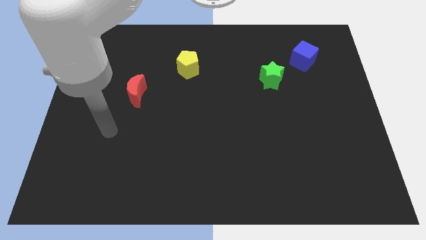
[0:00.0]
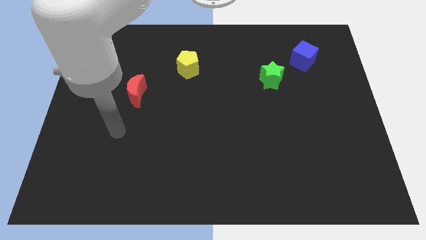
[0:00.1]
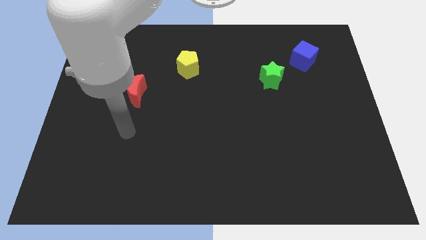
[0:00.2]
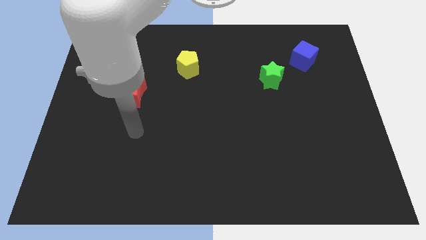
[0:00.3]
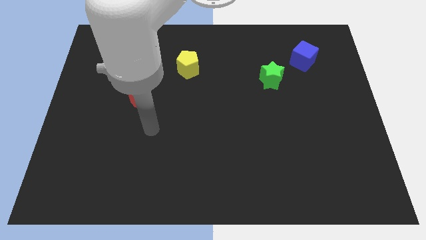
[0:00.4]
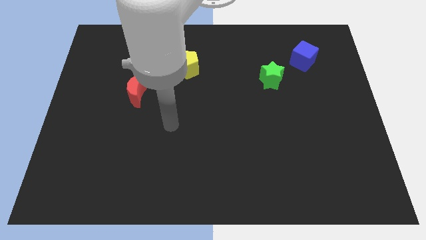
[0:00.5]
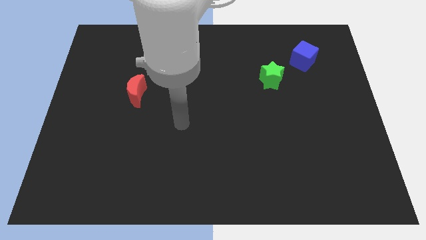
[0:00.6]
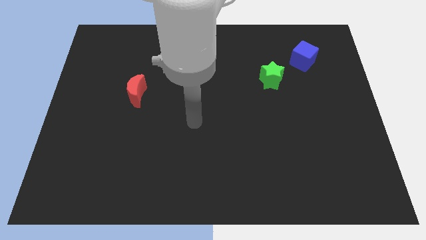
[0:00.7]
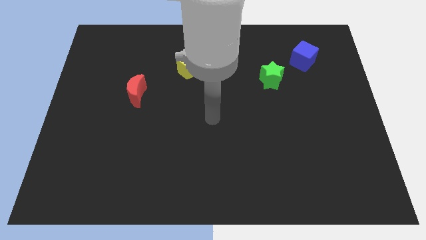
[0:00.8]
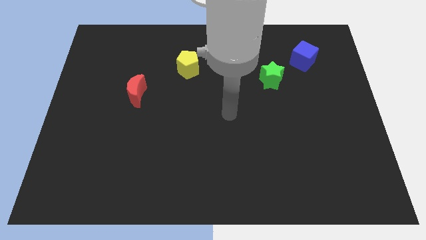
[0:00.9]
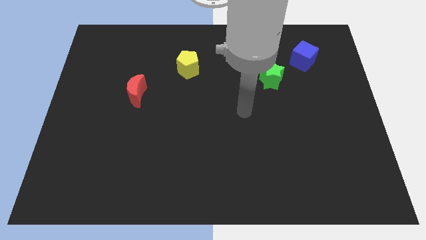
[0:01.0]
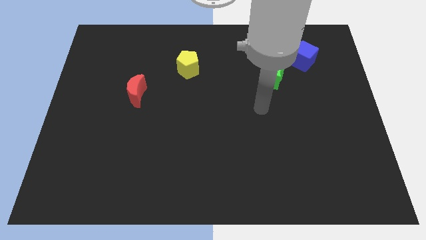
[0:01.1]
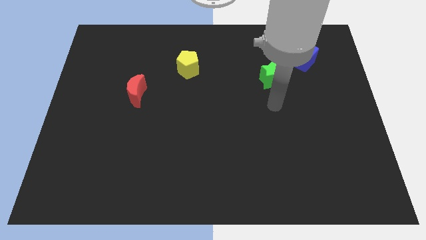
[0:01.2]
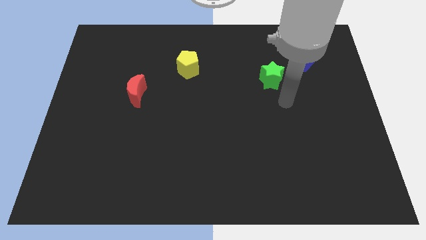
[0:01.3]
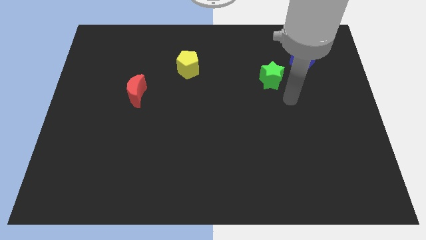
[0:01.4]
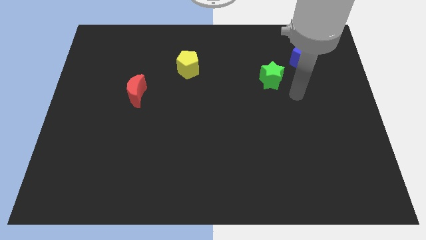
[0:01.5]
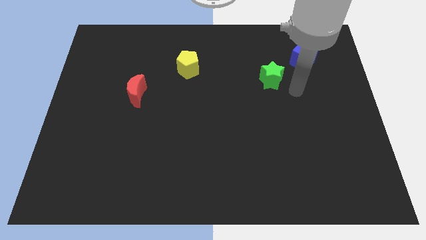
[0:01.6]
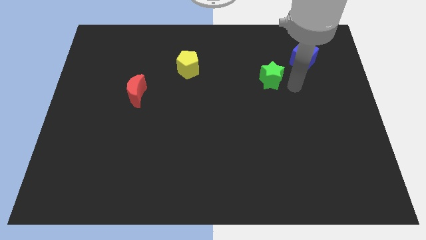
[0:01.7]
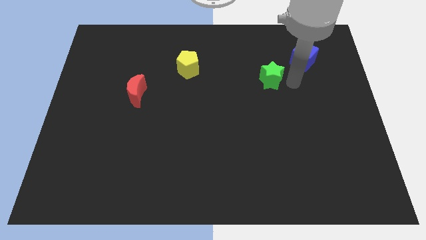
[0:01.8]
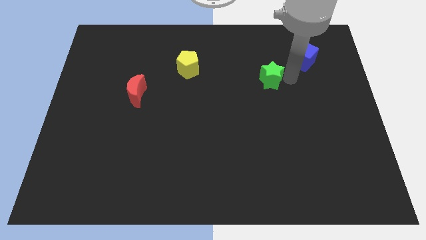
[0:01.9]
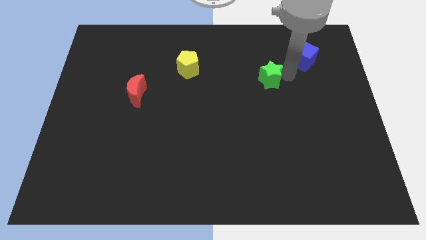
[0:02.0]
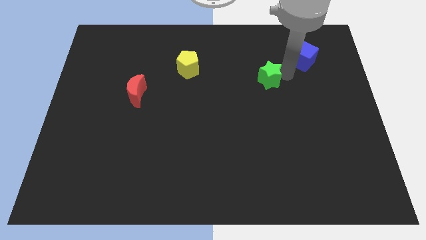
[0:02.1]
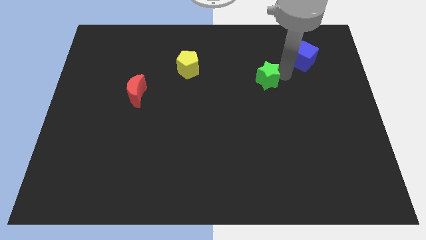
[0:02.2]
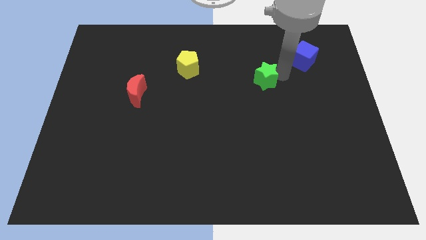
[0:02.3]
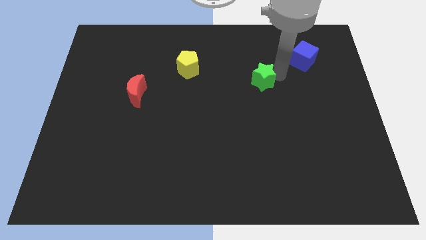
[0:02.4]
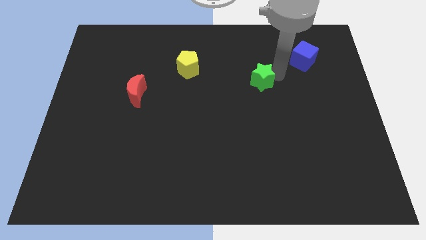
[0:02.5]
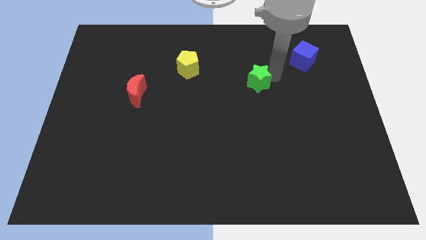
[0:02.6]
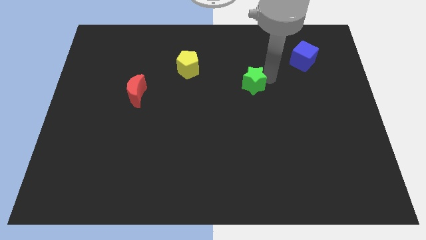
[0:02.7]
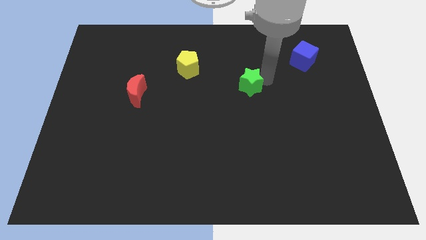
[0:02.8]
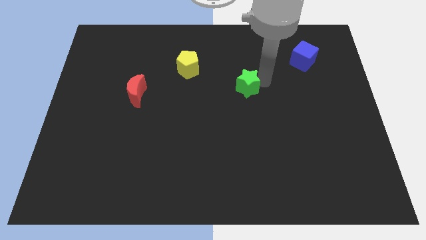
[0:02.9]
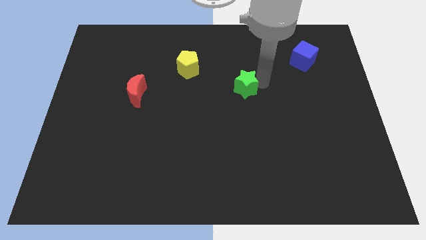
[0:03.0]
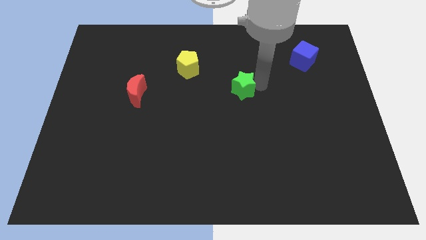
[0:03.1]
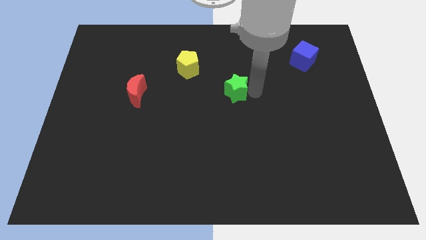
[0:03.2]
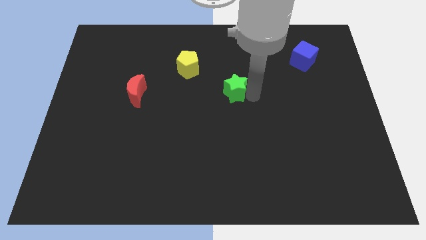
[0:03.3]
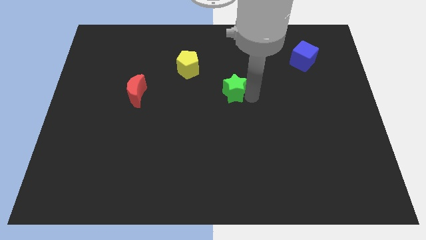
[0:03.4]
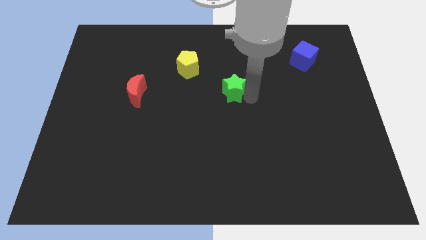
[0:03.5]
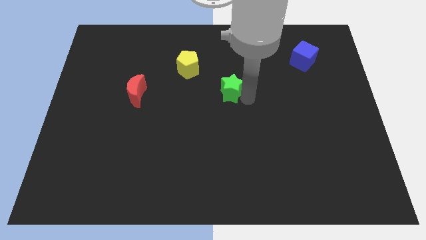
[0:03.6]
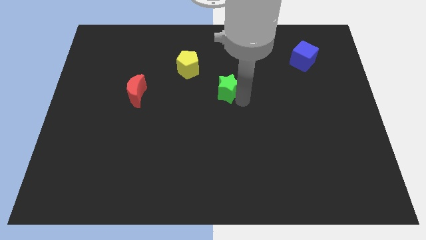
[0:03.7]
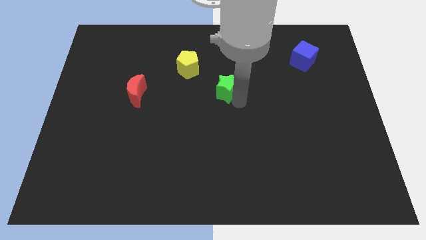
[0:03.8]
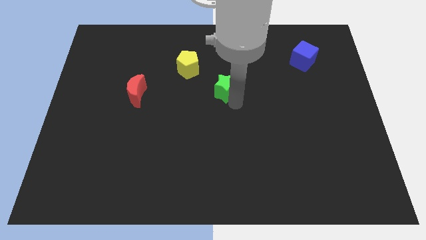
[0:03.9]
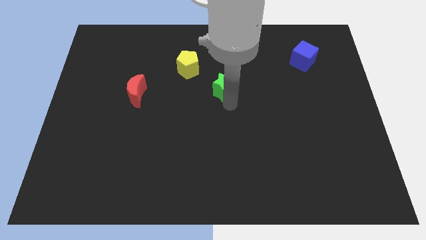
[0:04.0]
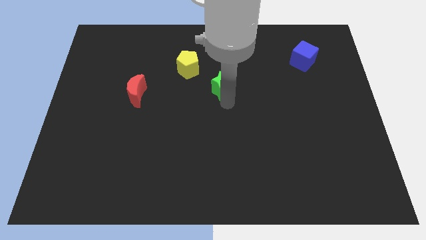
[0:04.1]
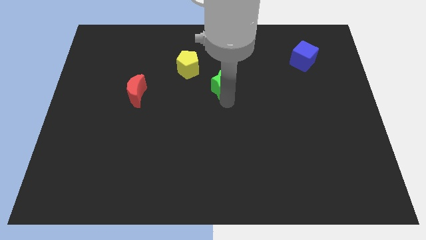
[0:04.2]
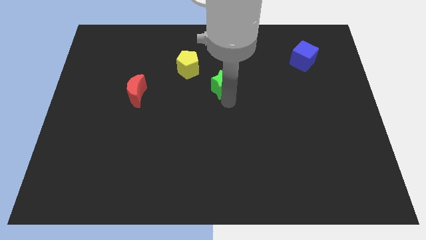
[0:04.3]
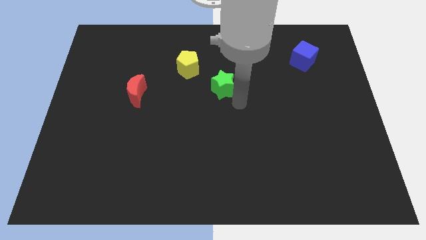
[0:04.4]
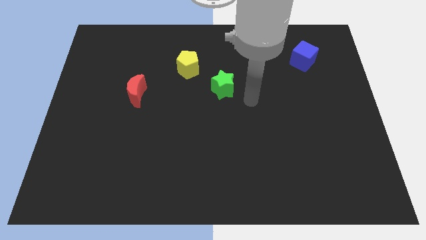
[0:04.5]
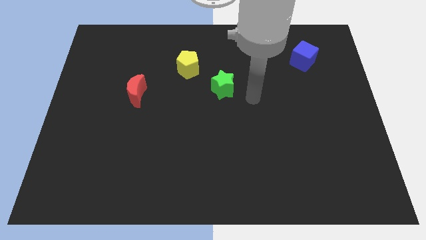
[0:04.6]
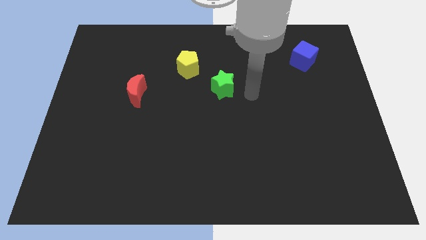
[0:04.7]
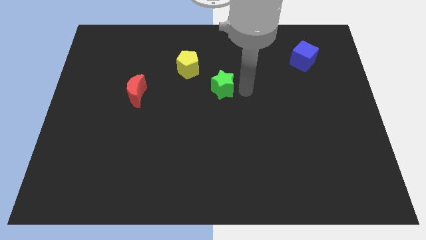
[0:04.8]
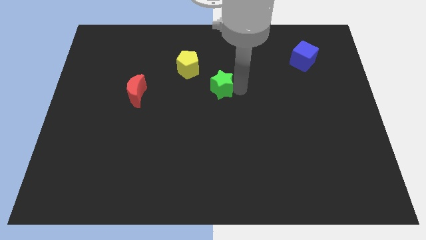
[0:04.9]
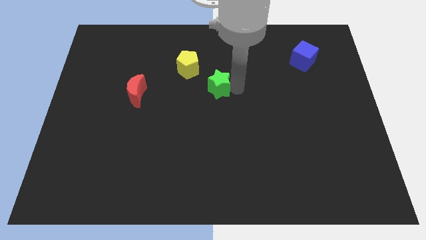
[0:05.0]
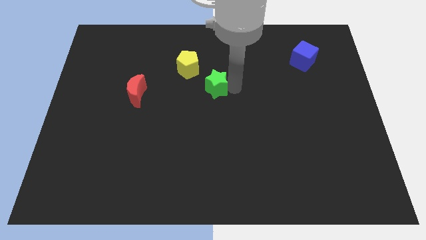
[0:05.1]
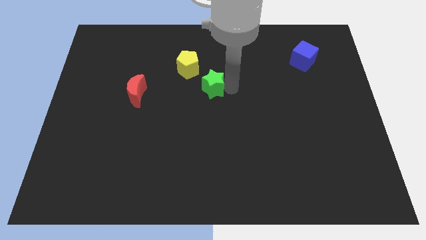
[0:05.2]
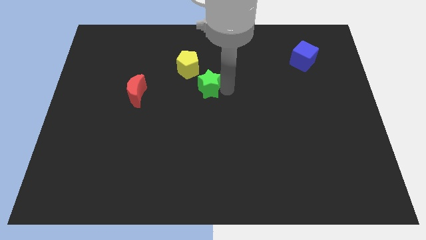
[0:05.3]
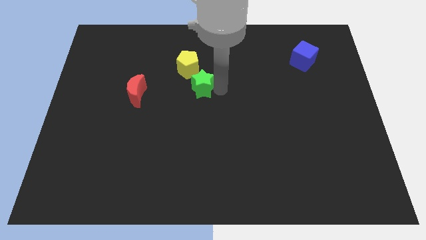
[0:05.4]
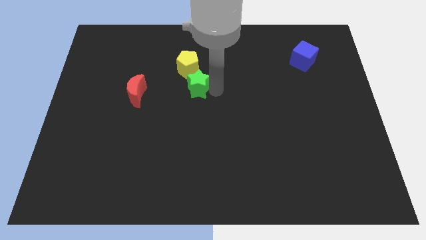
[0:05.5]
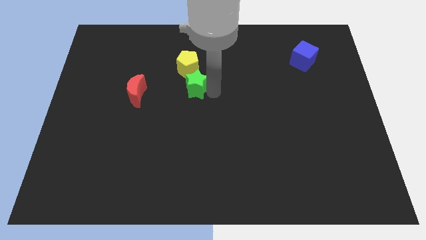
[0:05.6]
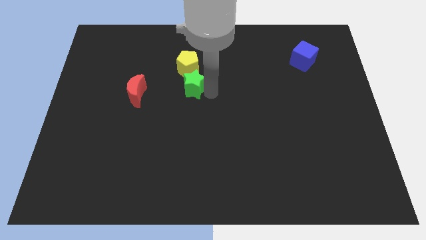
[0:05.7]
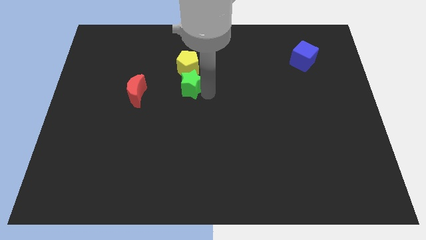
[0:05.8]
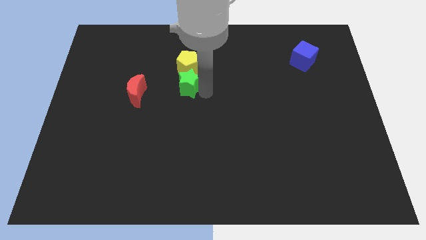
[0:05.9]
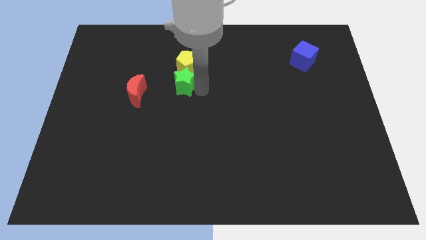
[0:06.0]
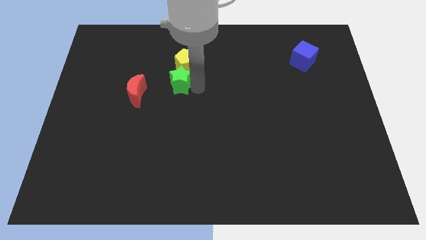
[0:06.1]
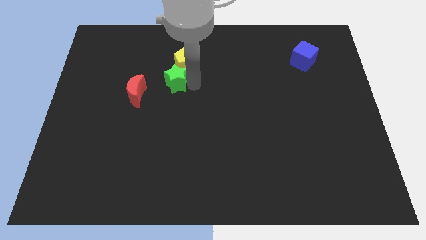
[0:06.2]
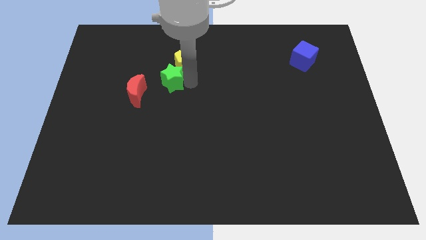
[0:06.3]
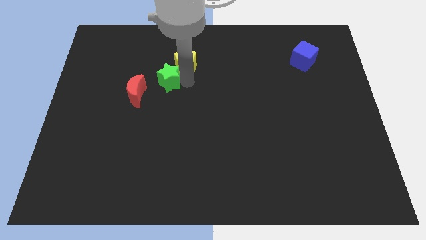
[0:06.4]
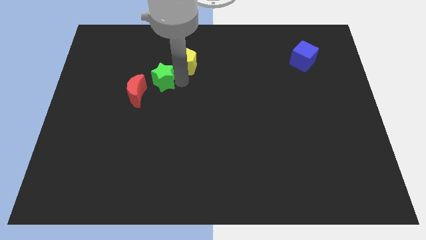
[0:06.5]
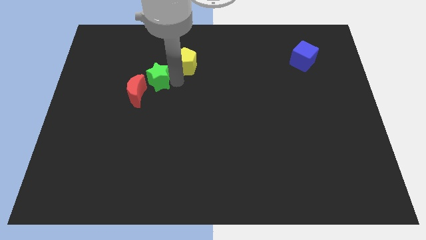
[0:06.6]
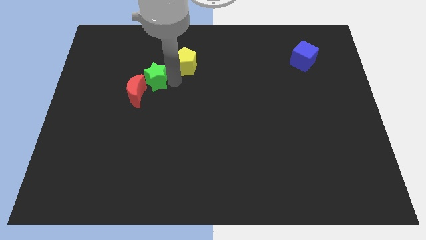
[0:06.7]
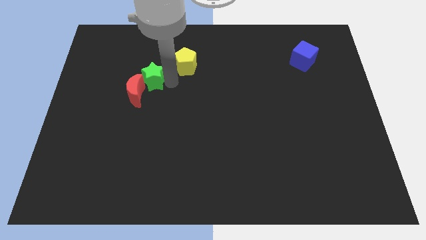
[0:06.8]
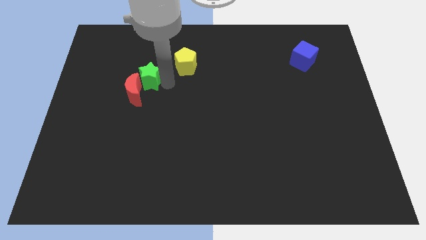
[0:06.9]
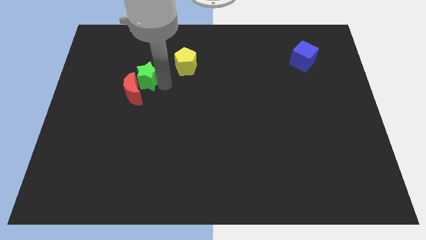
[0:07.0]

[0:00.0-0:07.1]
put the star towards the red block

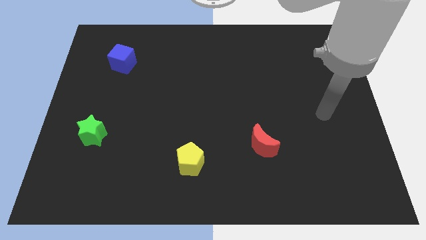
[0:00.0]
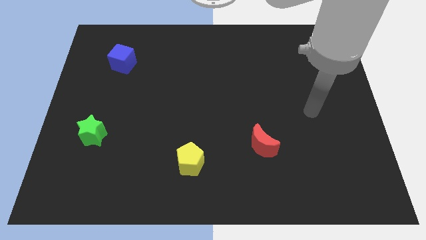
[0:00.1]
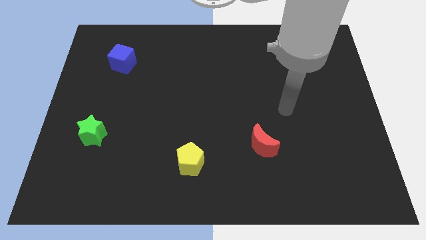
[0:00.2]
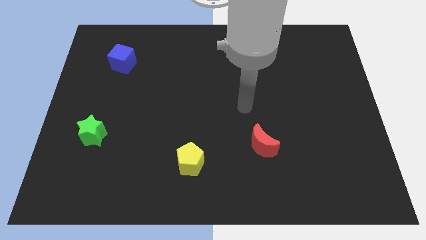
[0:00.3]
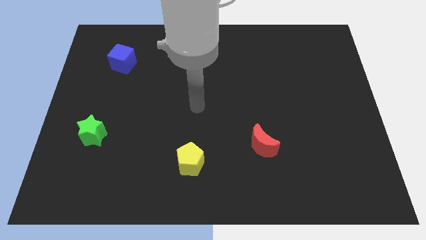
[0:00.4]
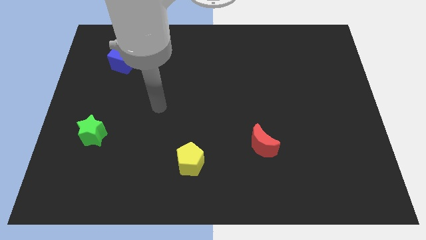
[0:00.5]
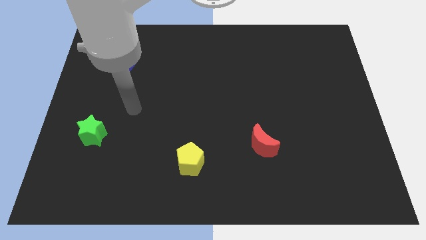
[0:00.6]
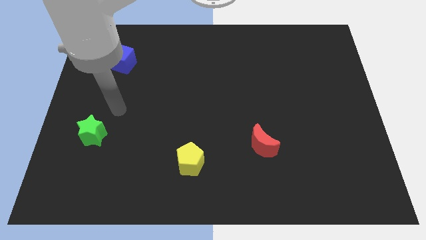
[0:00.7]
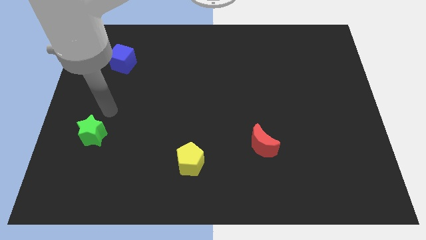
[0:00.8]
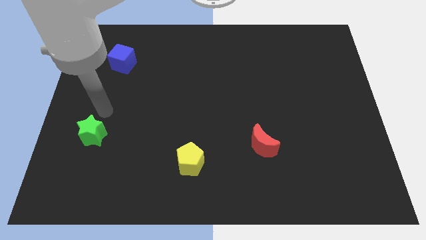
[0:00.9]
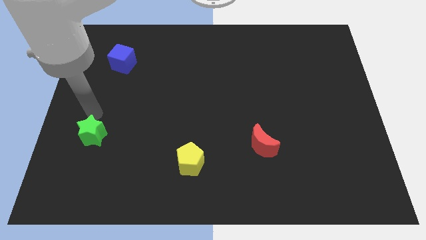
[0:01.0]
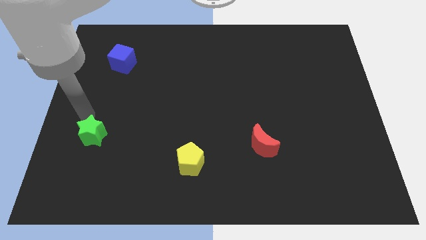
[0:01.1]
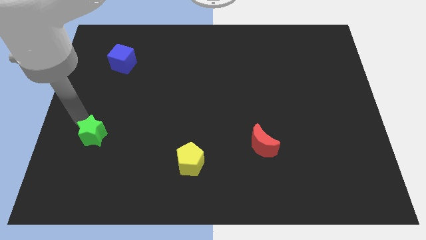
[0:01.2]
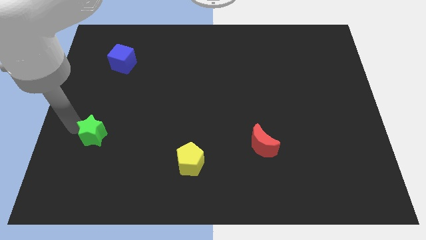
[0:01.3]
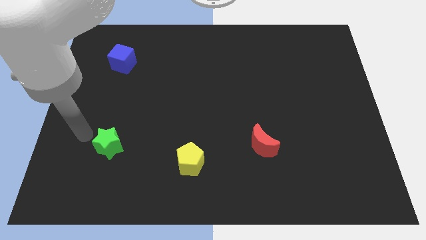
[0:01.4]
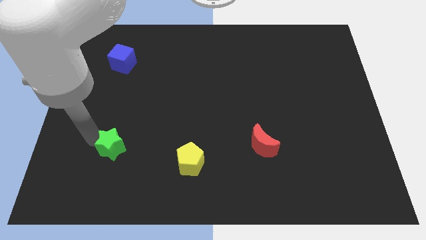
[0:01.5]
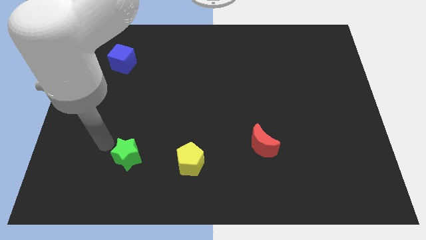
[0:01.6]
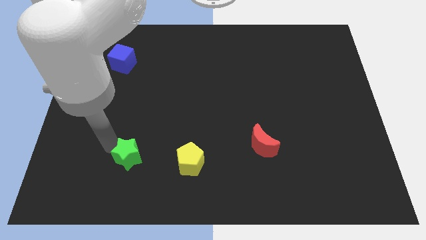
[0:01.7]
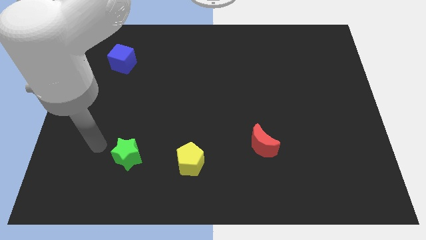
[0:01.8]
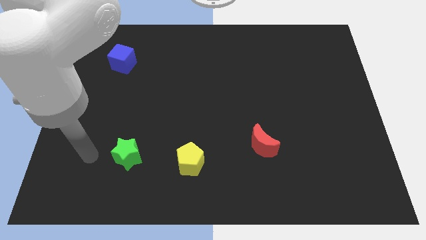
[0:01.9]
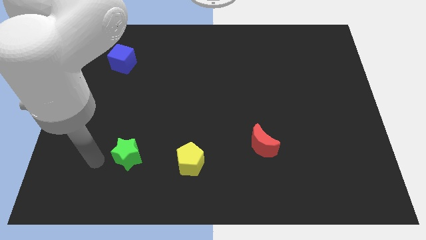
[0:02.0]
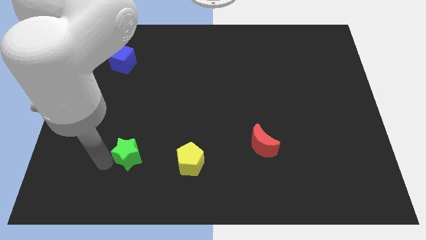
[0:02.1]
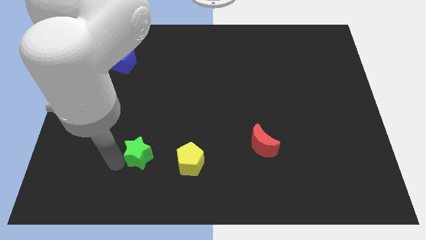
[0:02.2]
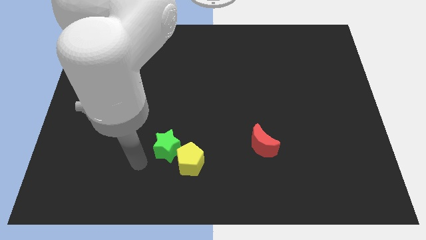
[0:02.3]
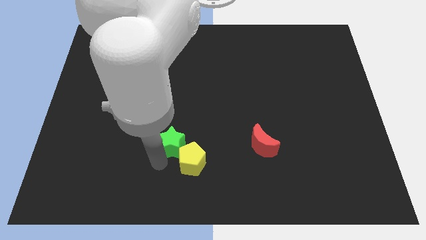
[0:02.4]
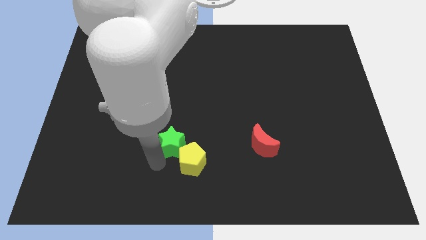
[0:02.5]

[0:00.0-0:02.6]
slide the green star towards the yellow block
